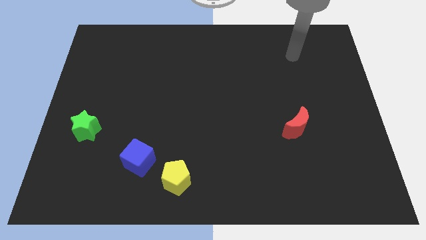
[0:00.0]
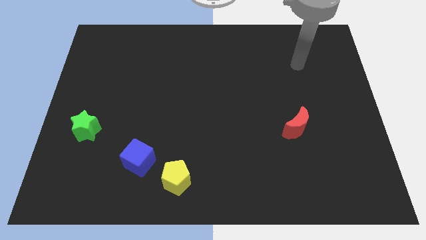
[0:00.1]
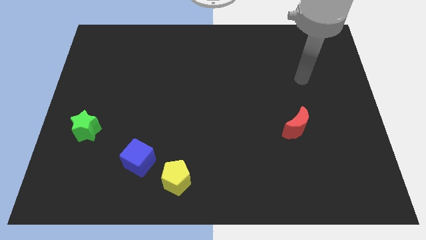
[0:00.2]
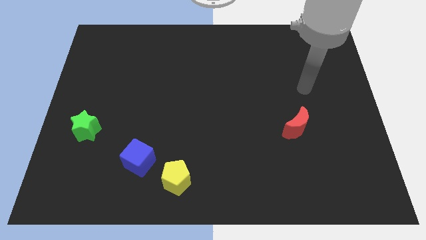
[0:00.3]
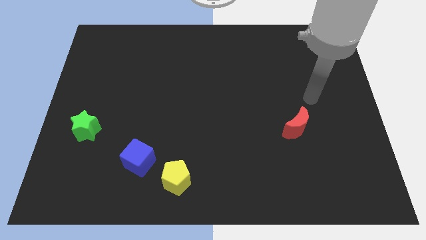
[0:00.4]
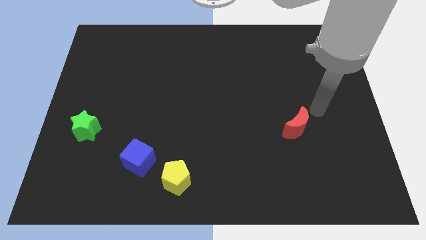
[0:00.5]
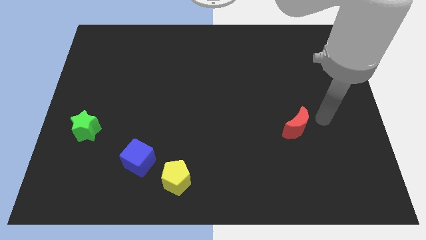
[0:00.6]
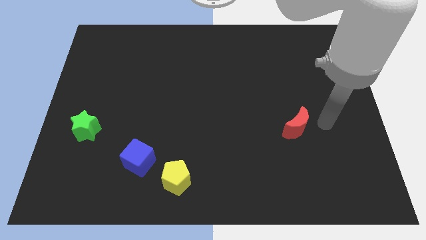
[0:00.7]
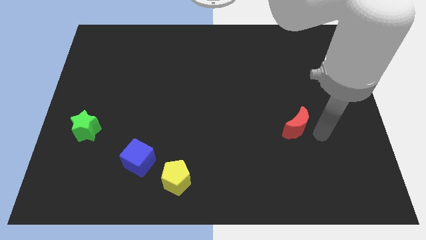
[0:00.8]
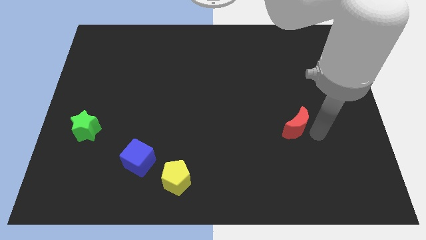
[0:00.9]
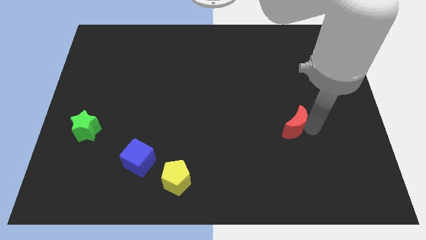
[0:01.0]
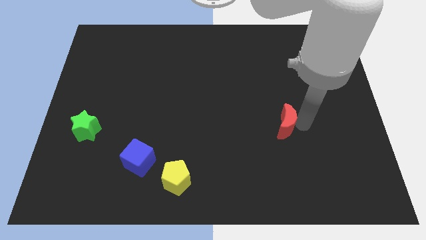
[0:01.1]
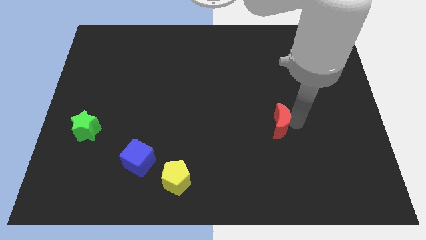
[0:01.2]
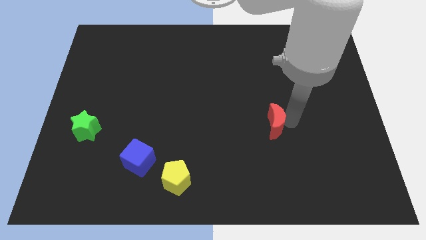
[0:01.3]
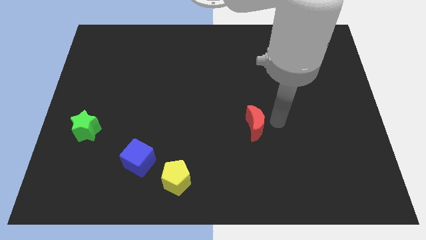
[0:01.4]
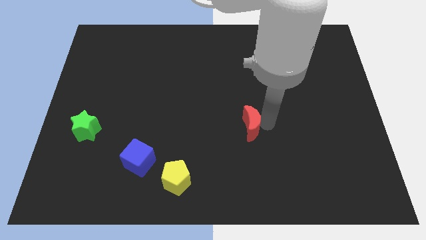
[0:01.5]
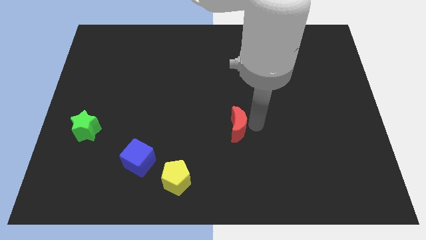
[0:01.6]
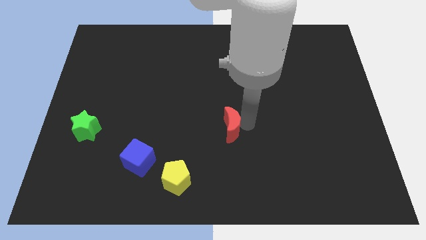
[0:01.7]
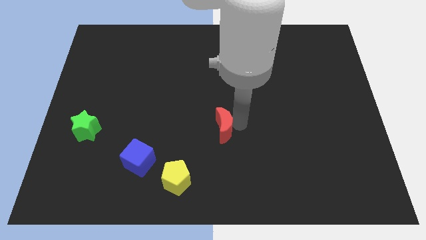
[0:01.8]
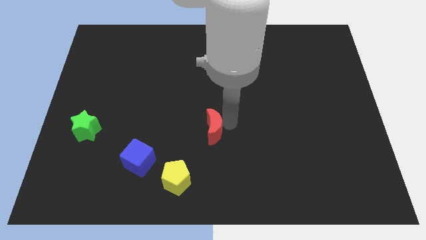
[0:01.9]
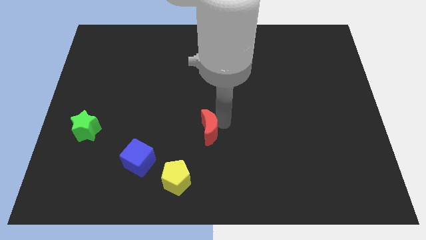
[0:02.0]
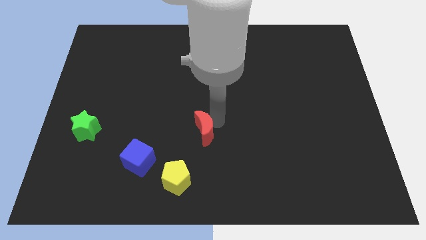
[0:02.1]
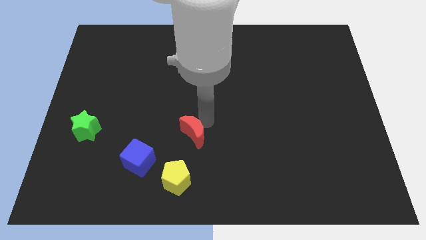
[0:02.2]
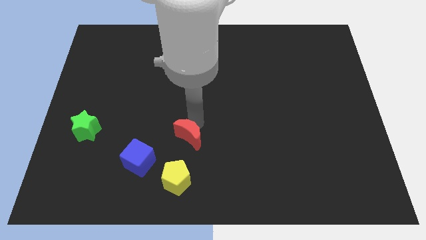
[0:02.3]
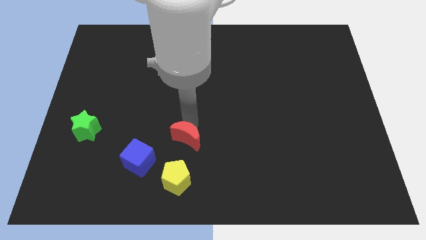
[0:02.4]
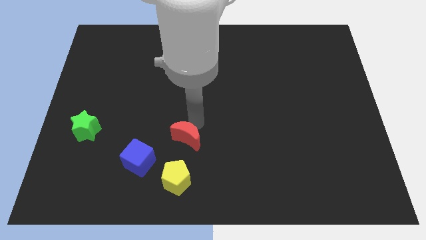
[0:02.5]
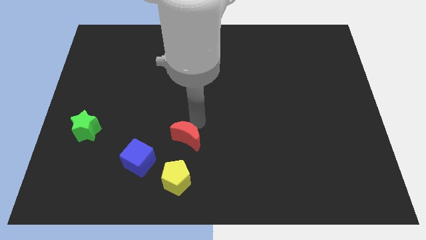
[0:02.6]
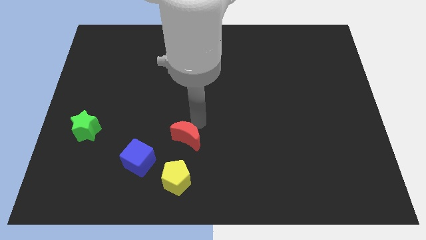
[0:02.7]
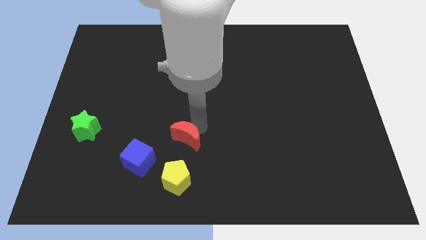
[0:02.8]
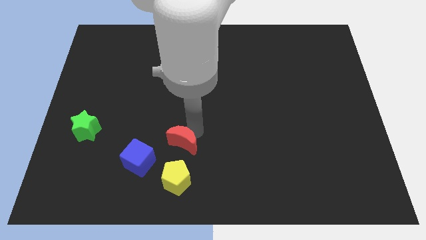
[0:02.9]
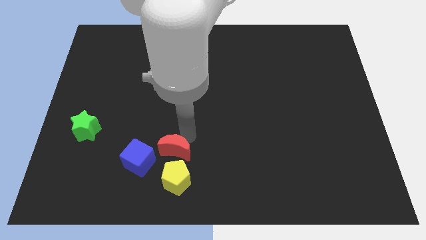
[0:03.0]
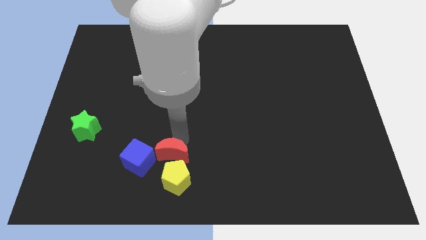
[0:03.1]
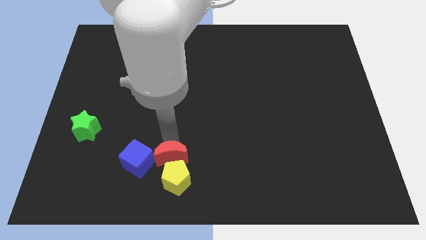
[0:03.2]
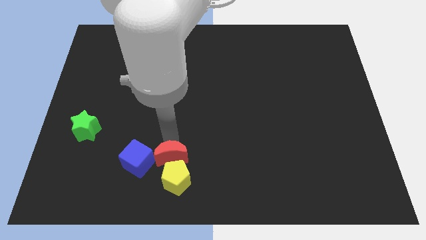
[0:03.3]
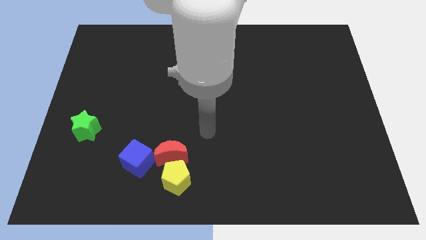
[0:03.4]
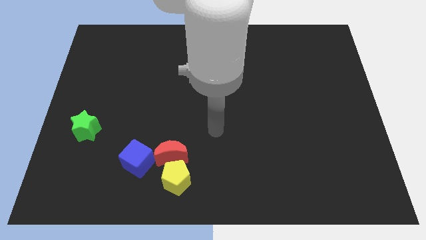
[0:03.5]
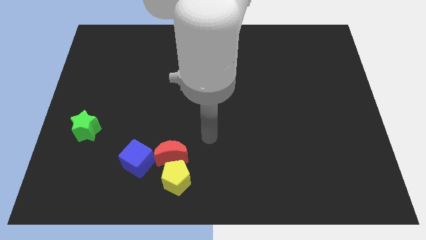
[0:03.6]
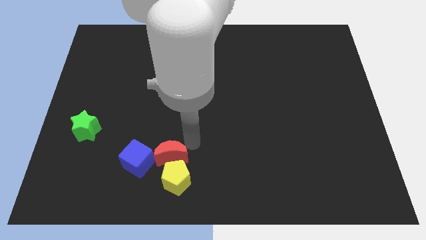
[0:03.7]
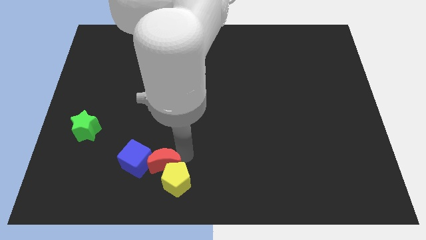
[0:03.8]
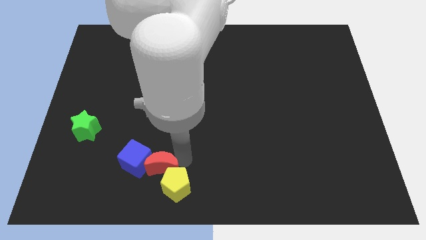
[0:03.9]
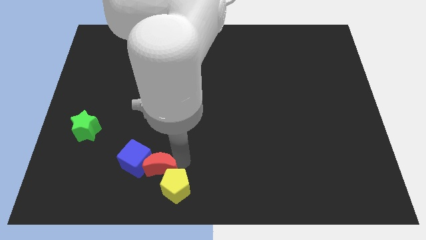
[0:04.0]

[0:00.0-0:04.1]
move the moon next to the cube

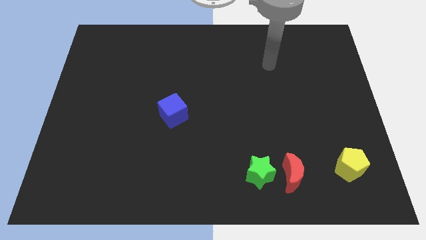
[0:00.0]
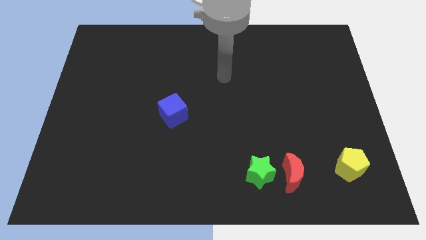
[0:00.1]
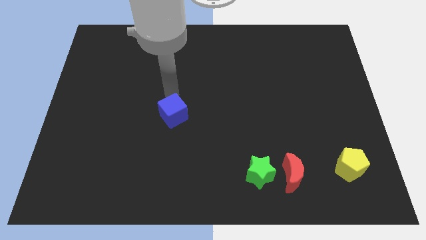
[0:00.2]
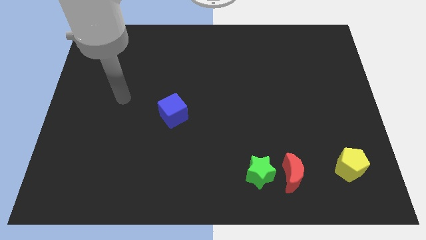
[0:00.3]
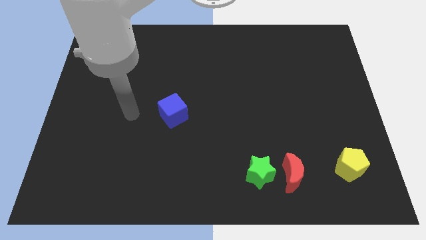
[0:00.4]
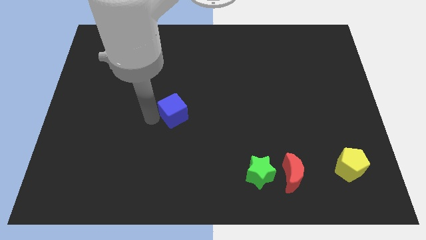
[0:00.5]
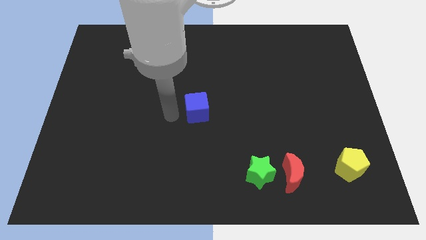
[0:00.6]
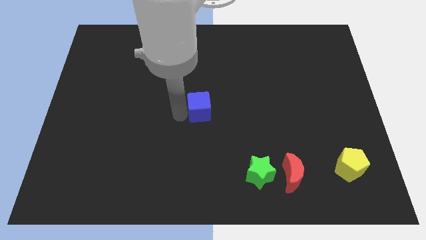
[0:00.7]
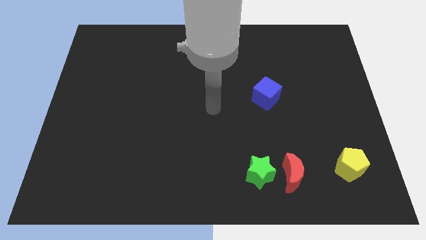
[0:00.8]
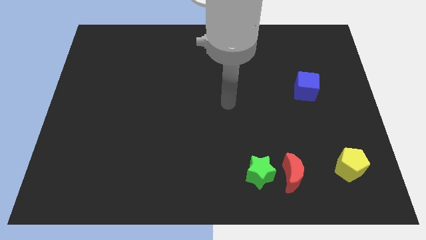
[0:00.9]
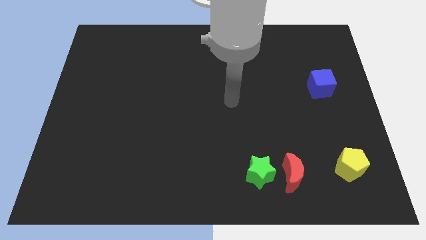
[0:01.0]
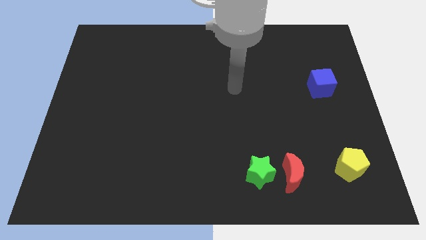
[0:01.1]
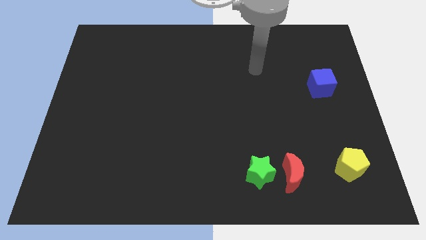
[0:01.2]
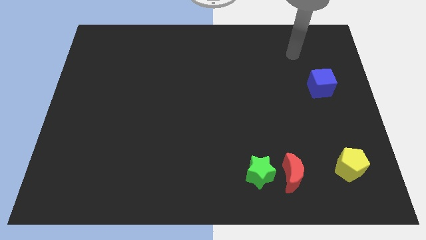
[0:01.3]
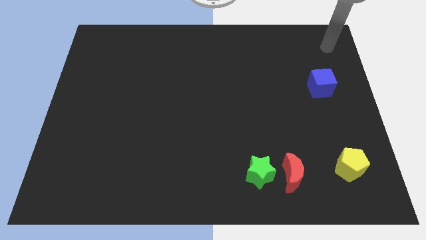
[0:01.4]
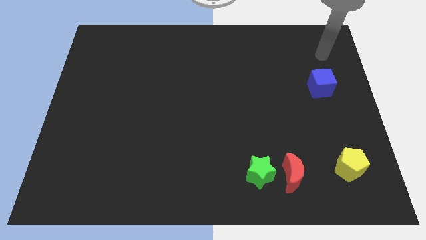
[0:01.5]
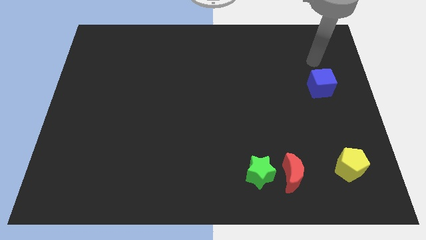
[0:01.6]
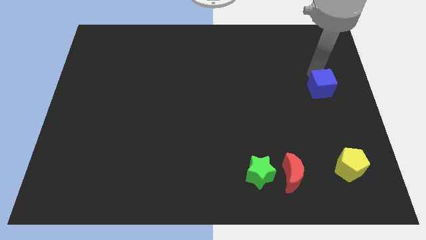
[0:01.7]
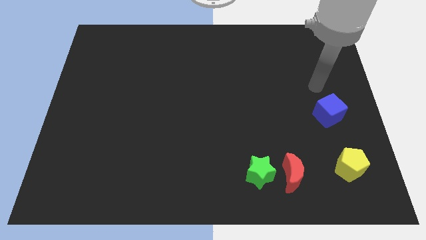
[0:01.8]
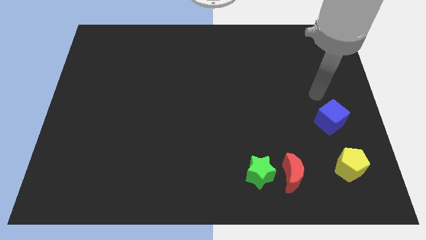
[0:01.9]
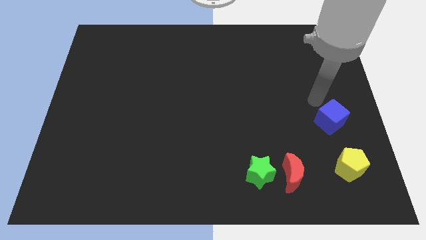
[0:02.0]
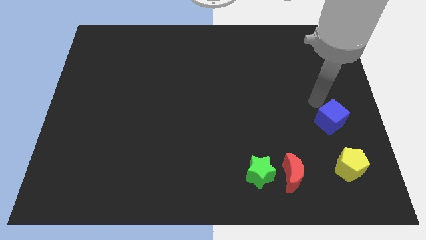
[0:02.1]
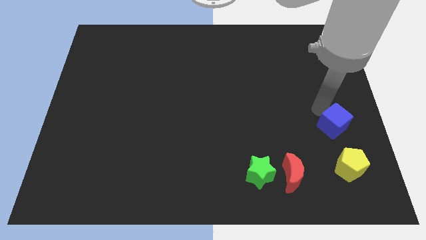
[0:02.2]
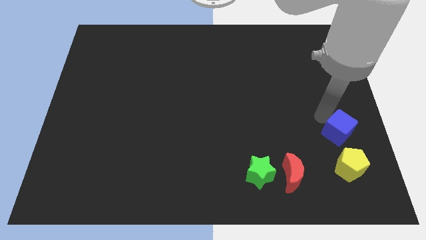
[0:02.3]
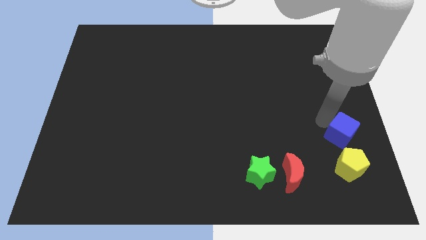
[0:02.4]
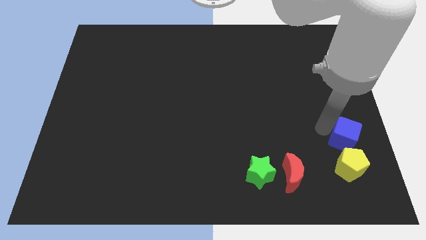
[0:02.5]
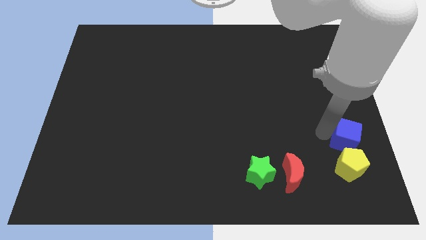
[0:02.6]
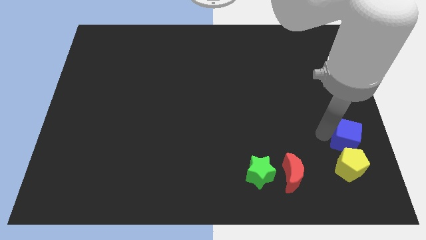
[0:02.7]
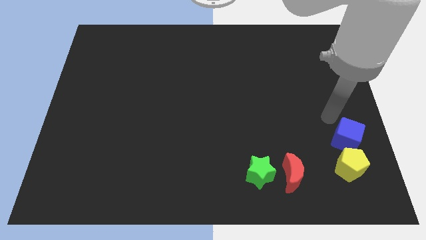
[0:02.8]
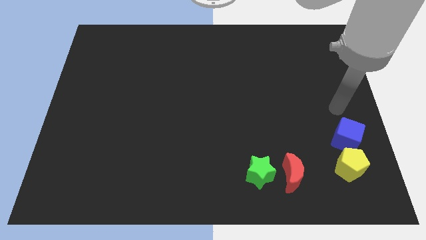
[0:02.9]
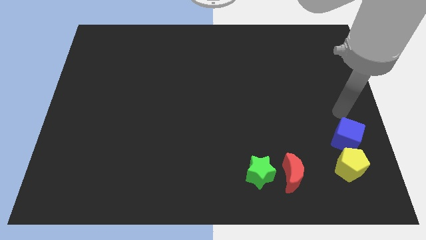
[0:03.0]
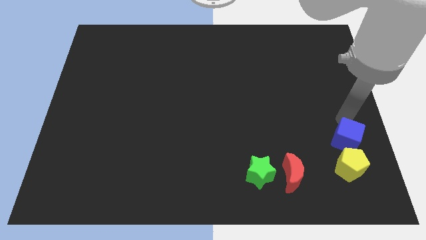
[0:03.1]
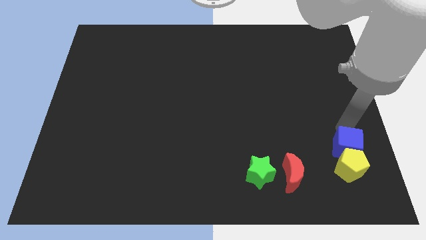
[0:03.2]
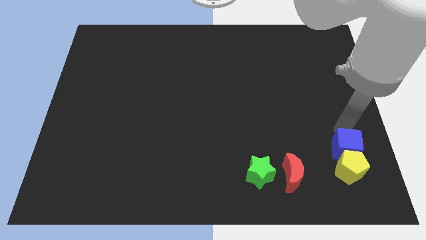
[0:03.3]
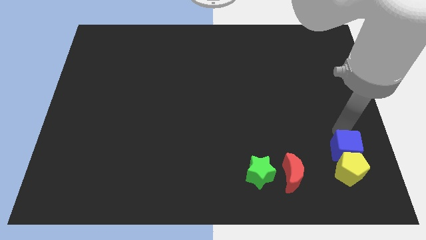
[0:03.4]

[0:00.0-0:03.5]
push the blue cube to the yellow block

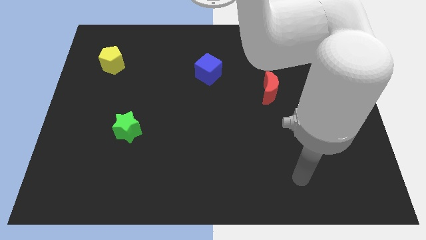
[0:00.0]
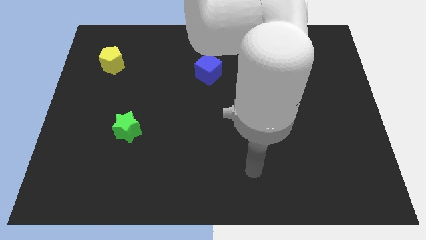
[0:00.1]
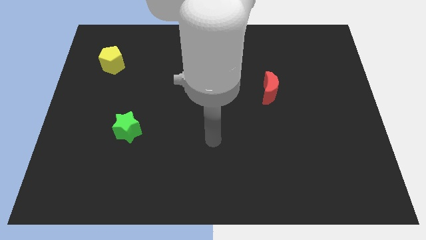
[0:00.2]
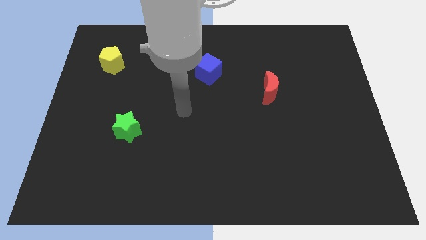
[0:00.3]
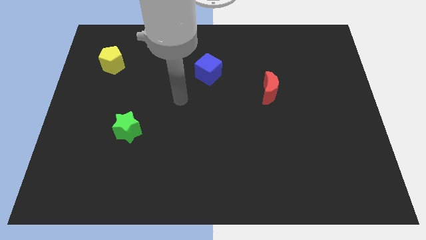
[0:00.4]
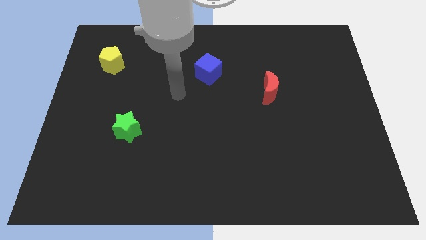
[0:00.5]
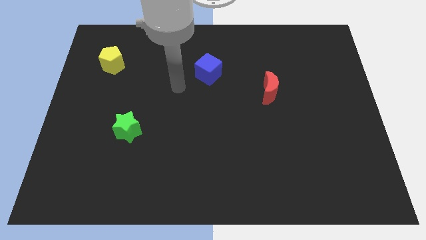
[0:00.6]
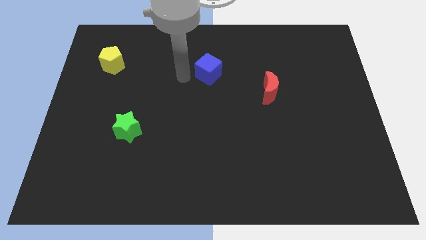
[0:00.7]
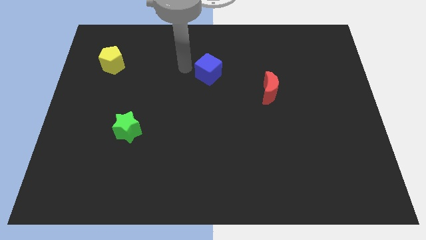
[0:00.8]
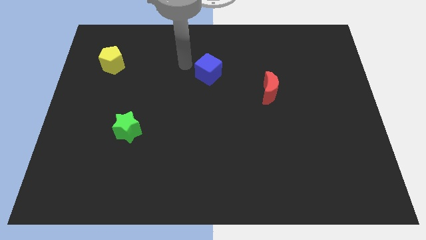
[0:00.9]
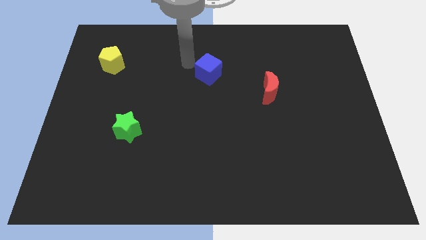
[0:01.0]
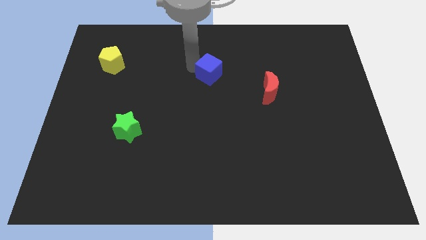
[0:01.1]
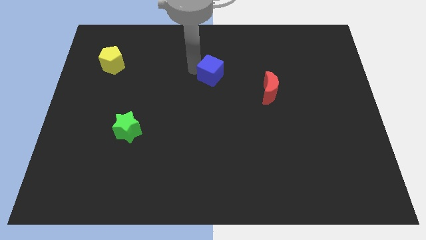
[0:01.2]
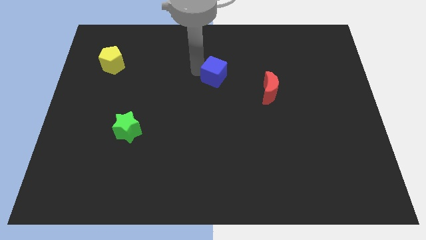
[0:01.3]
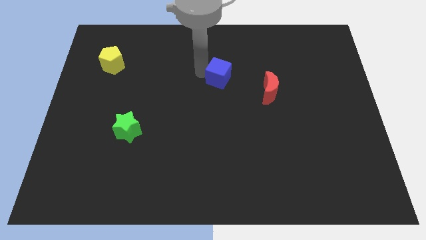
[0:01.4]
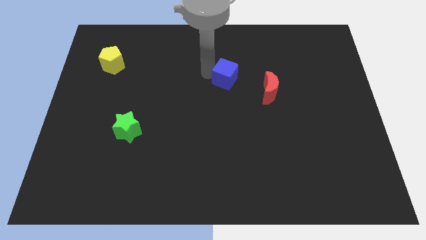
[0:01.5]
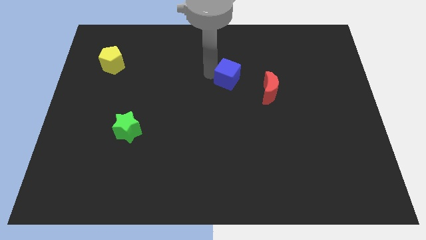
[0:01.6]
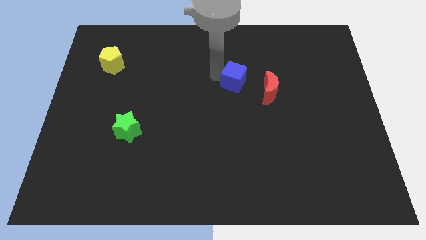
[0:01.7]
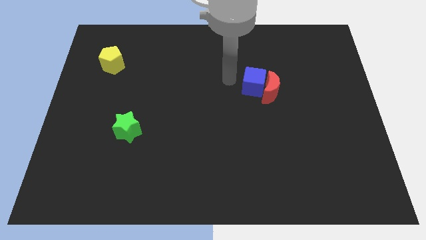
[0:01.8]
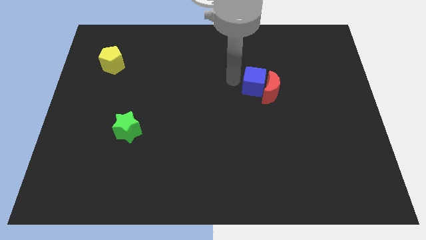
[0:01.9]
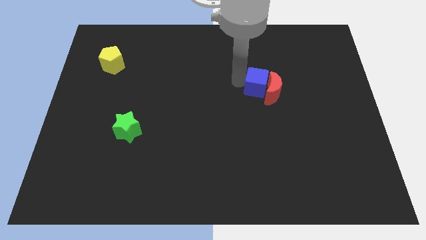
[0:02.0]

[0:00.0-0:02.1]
move the blue block to the moon
